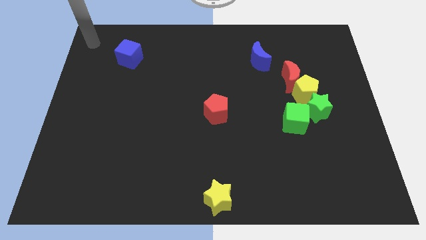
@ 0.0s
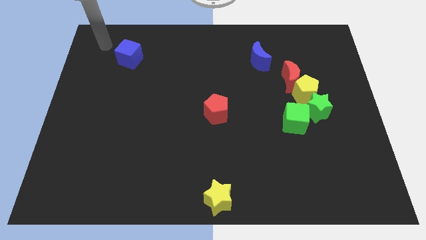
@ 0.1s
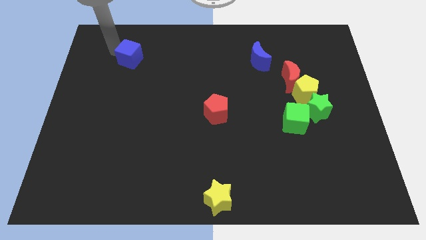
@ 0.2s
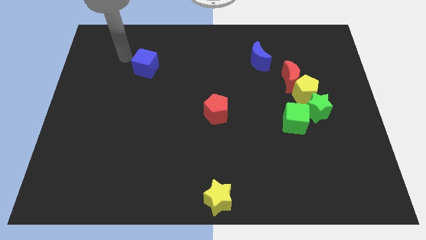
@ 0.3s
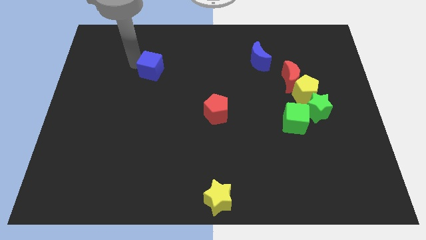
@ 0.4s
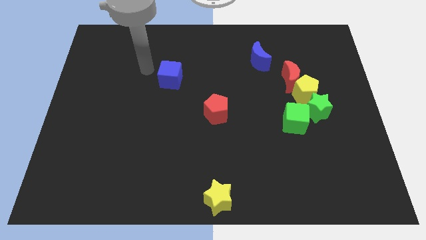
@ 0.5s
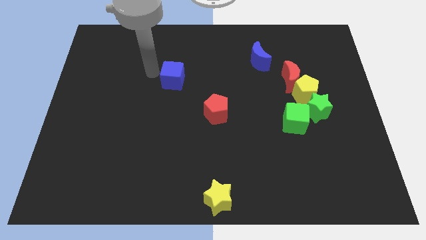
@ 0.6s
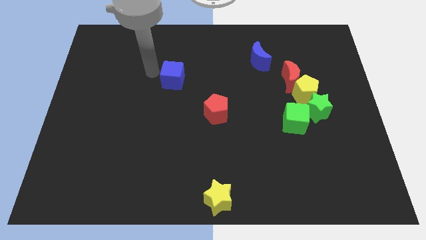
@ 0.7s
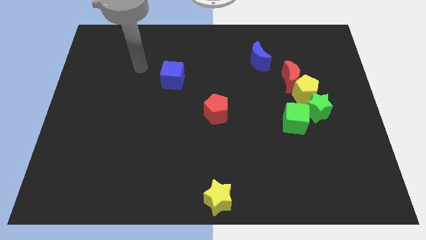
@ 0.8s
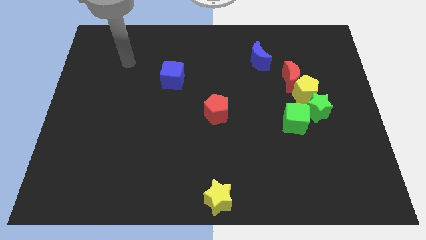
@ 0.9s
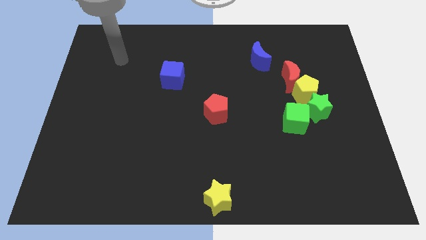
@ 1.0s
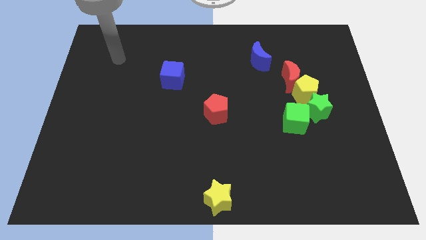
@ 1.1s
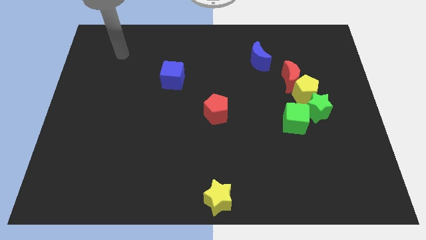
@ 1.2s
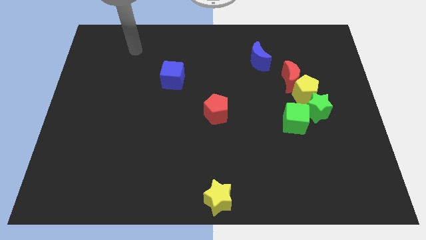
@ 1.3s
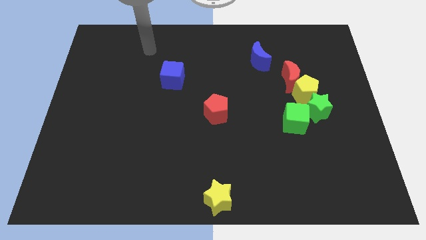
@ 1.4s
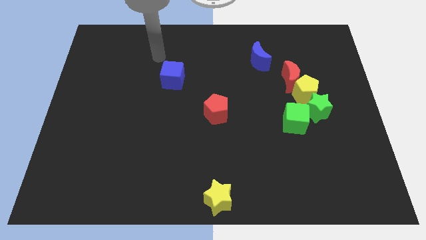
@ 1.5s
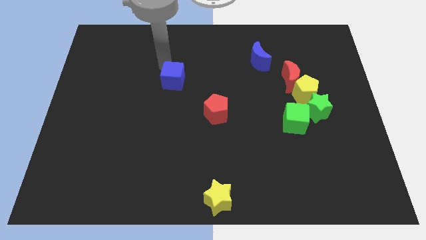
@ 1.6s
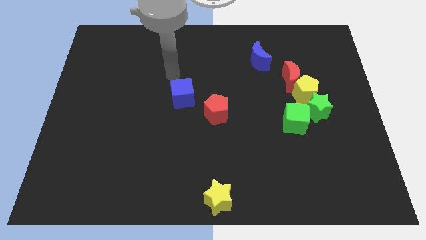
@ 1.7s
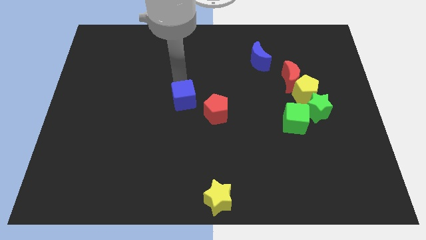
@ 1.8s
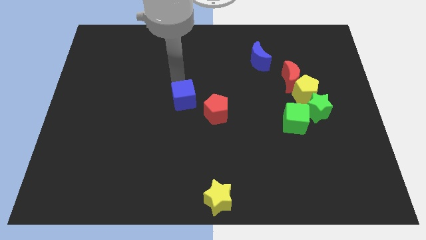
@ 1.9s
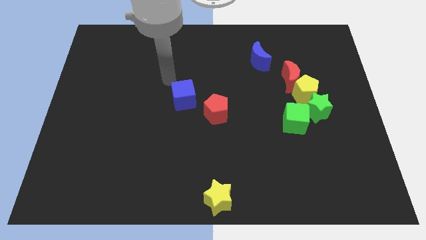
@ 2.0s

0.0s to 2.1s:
move the blue cube towards the center

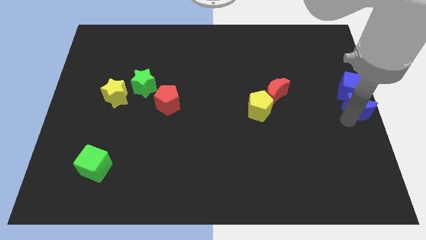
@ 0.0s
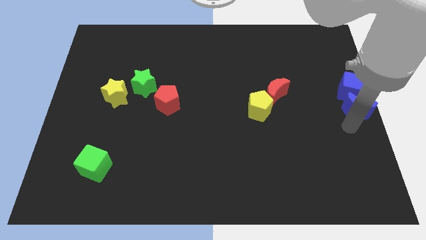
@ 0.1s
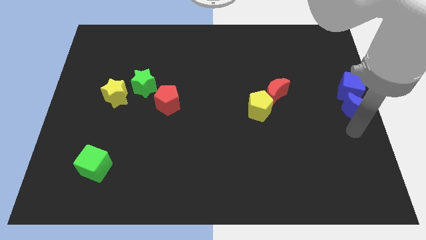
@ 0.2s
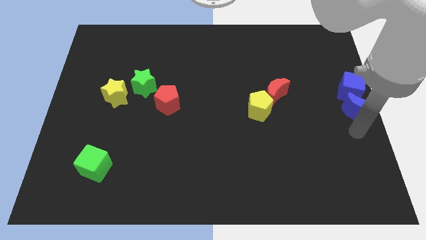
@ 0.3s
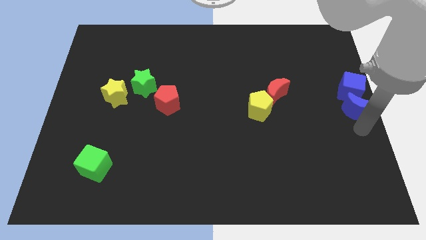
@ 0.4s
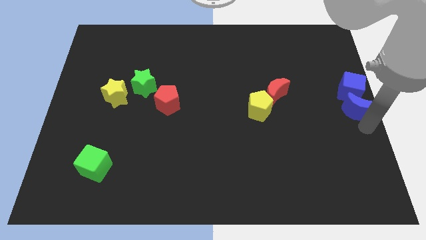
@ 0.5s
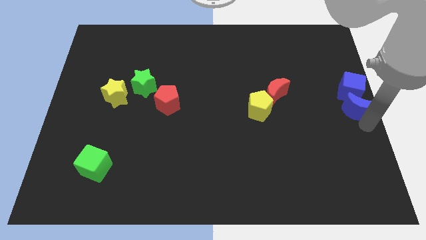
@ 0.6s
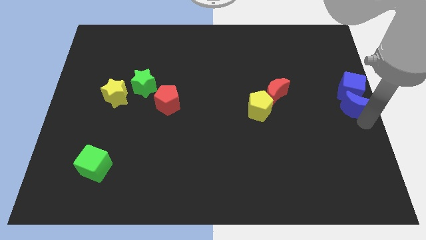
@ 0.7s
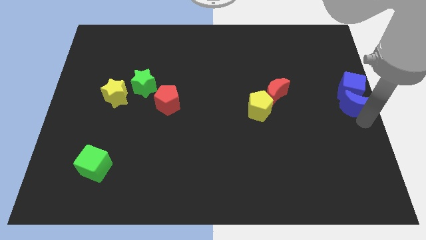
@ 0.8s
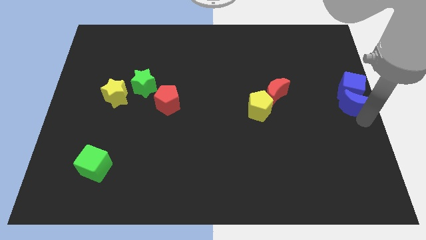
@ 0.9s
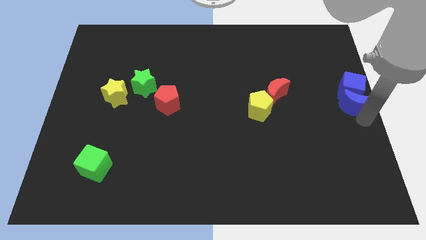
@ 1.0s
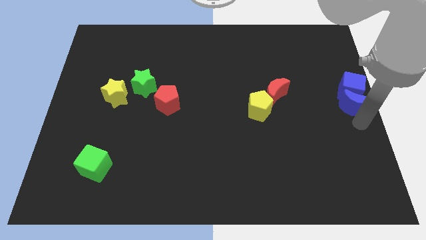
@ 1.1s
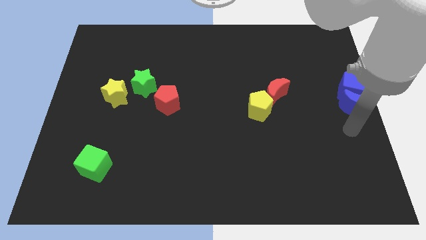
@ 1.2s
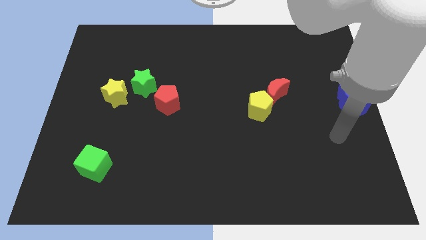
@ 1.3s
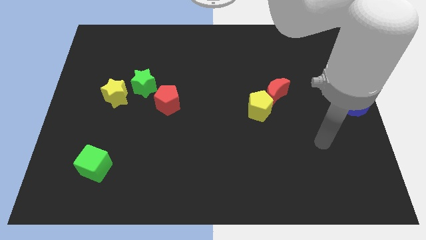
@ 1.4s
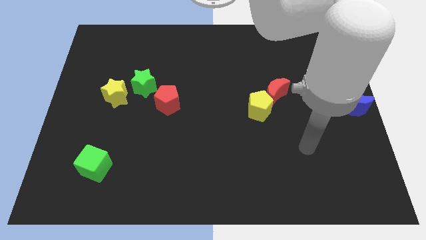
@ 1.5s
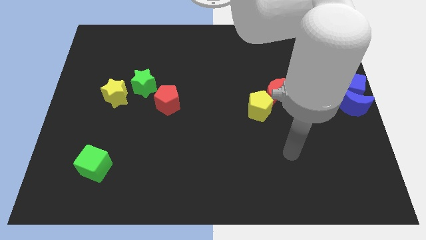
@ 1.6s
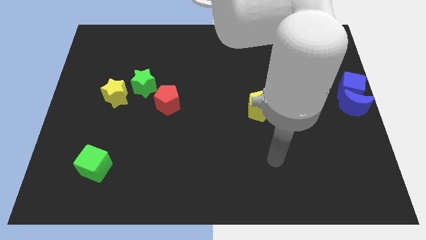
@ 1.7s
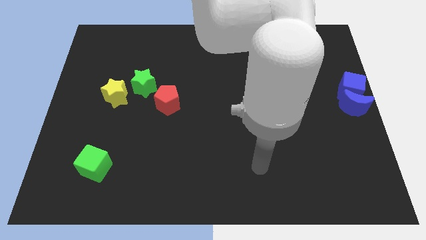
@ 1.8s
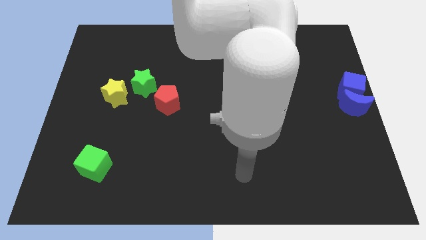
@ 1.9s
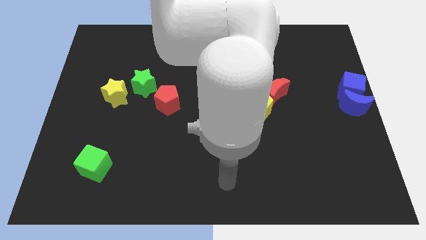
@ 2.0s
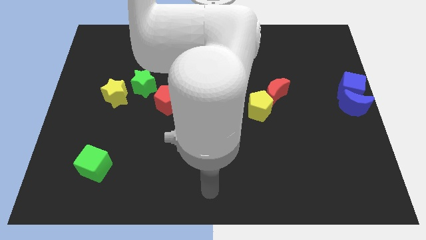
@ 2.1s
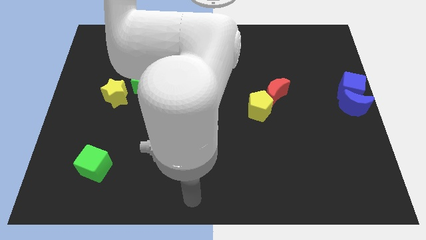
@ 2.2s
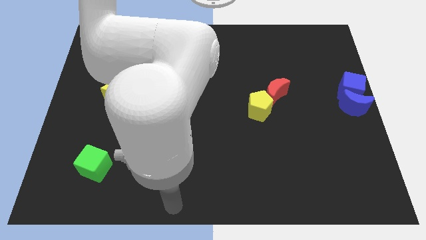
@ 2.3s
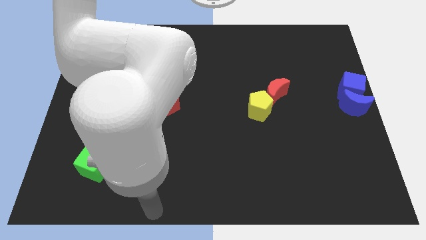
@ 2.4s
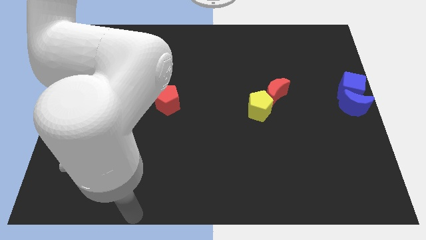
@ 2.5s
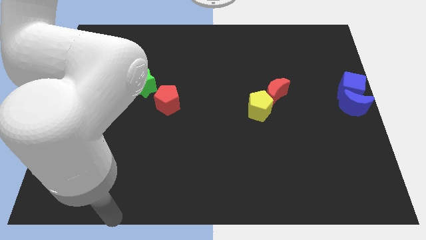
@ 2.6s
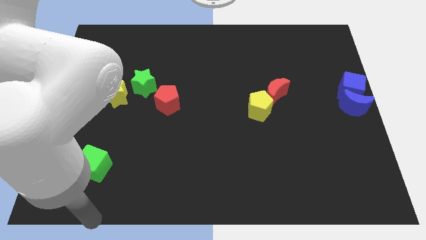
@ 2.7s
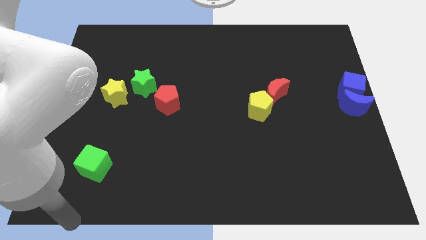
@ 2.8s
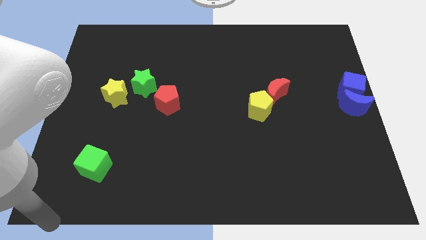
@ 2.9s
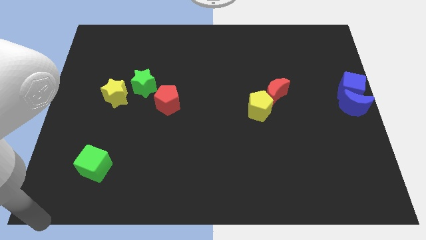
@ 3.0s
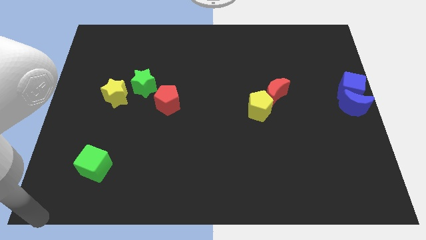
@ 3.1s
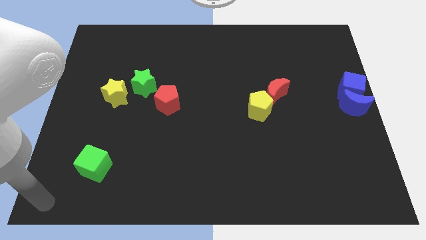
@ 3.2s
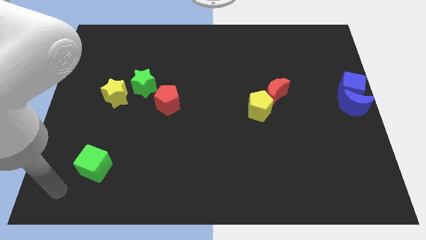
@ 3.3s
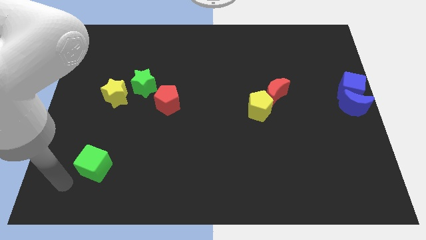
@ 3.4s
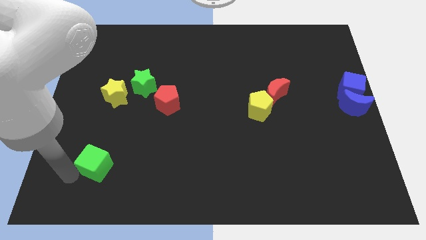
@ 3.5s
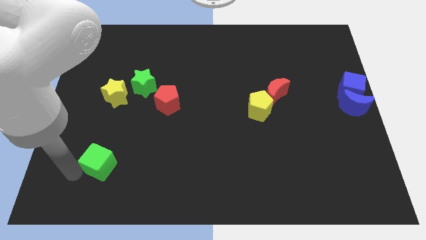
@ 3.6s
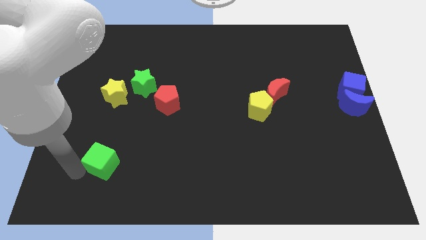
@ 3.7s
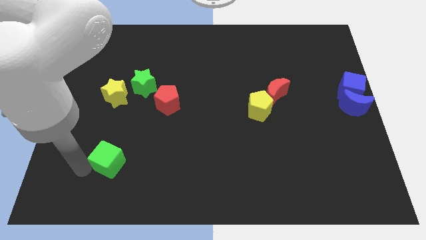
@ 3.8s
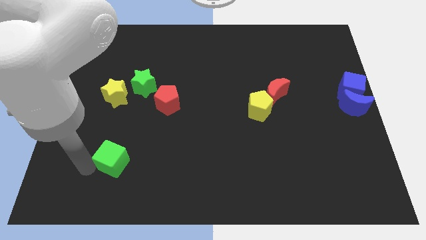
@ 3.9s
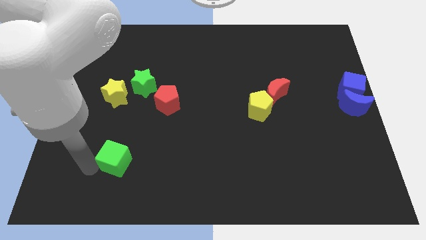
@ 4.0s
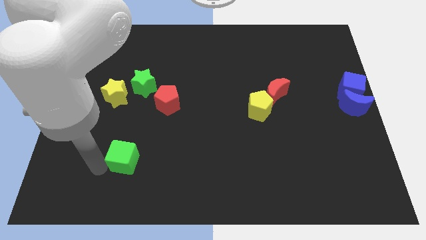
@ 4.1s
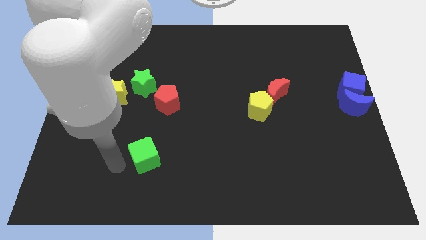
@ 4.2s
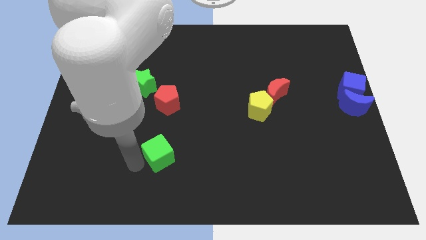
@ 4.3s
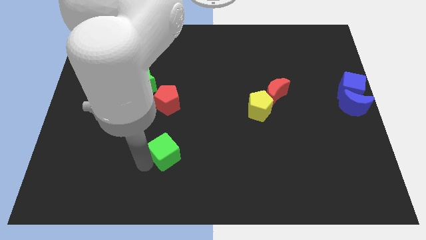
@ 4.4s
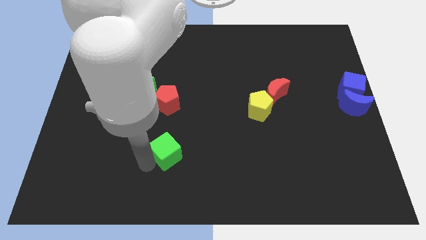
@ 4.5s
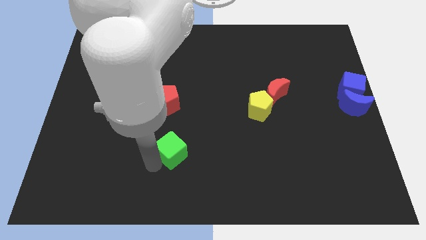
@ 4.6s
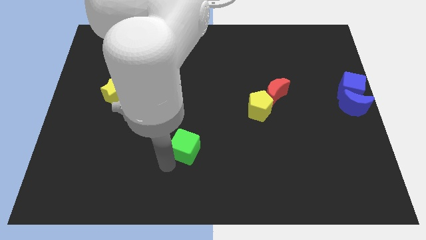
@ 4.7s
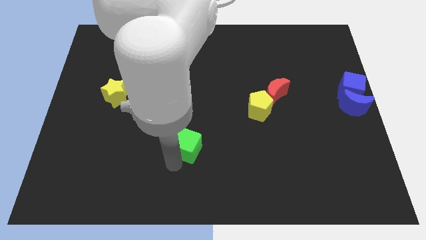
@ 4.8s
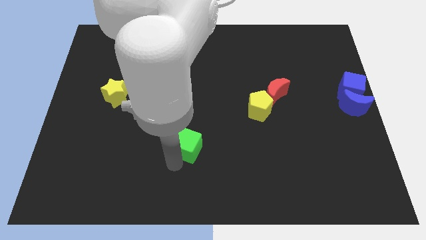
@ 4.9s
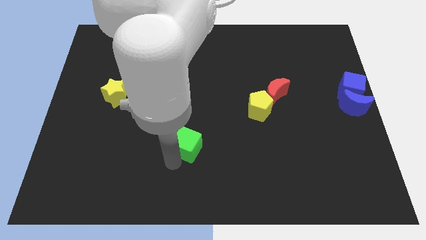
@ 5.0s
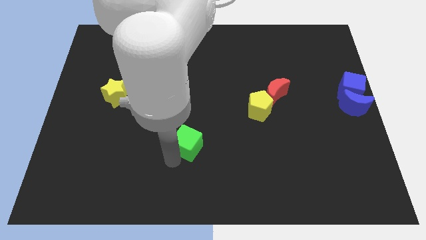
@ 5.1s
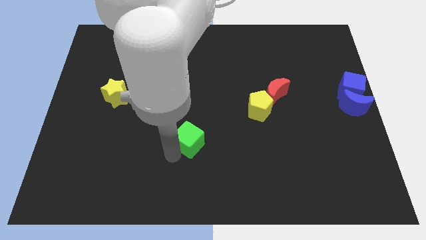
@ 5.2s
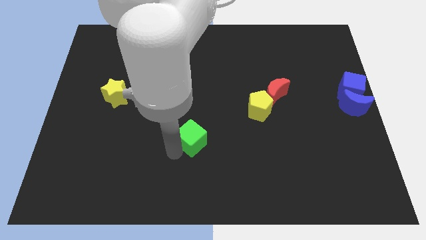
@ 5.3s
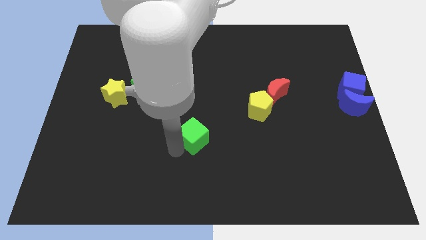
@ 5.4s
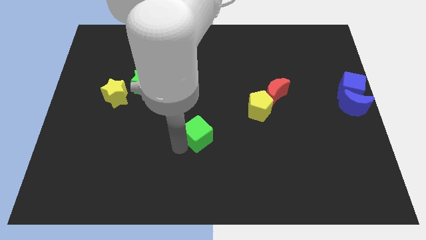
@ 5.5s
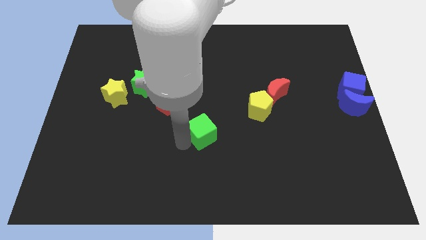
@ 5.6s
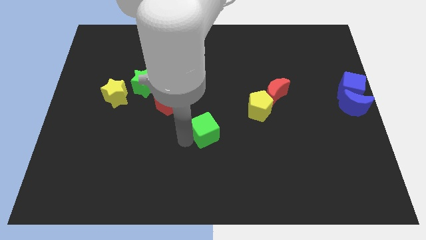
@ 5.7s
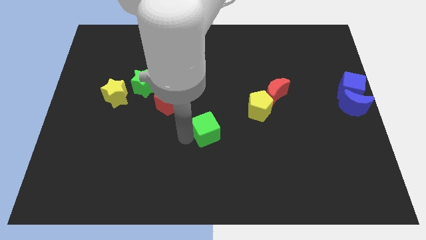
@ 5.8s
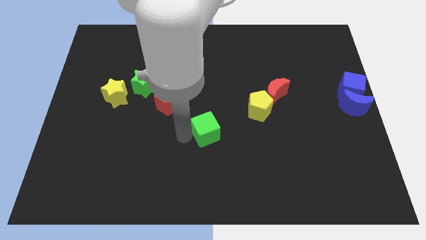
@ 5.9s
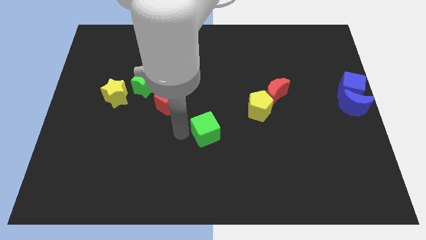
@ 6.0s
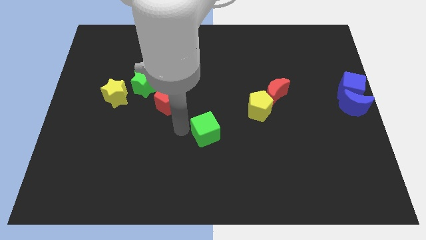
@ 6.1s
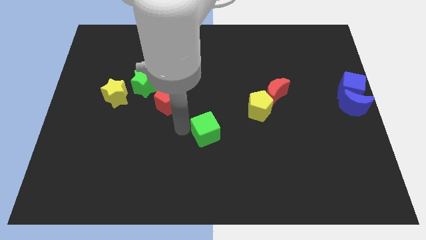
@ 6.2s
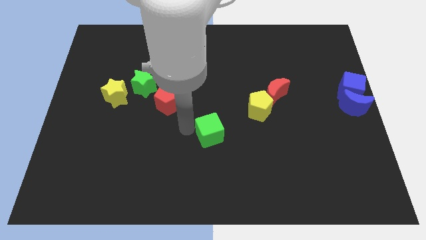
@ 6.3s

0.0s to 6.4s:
move the green cube left below the yellow pentagon

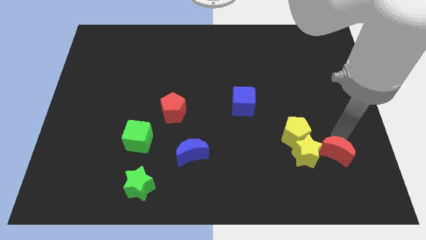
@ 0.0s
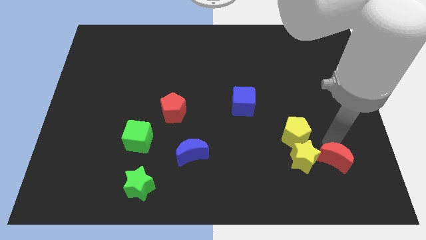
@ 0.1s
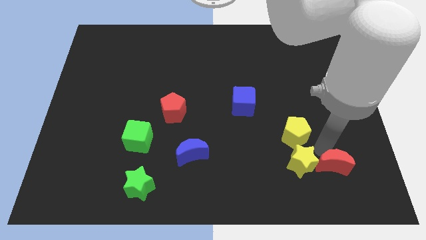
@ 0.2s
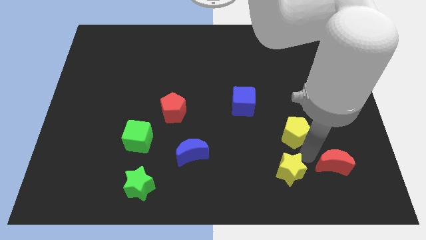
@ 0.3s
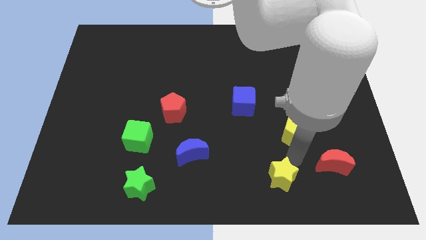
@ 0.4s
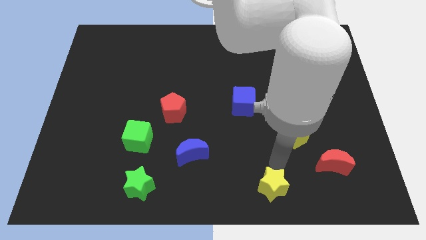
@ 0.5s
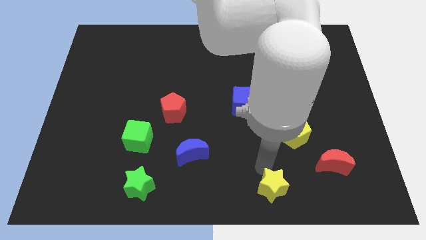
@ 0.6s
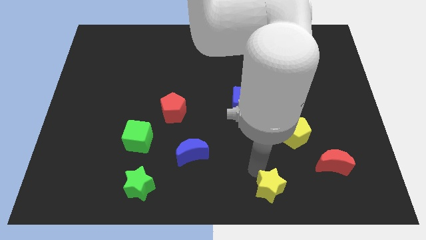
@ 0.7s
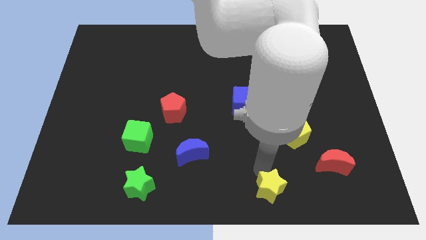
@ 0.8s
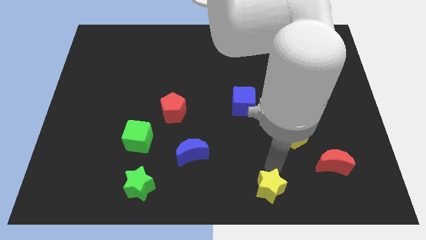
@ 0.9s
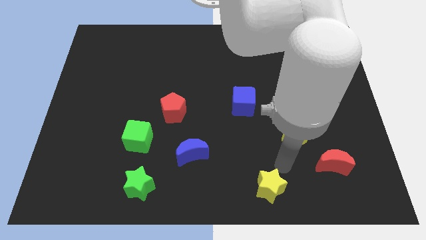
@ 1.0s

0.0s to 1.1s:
move the yellow star away from the yellow pentagon
